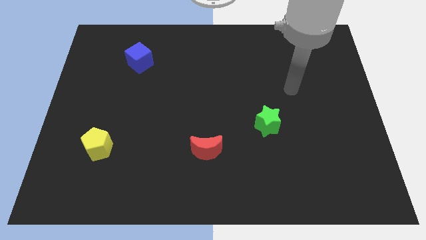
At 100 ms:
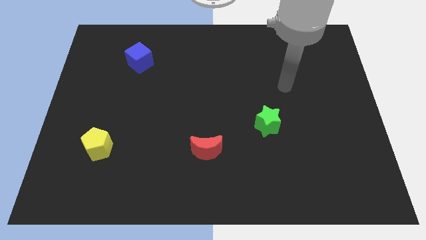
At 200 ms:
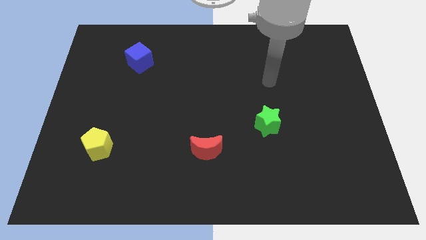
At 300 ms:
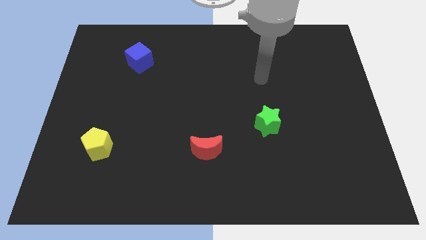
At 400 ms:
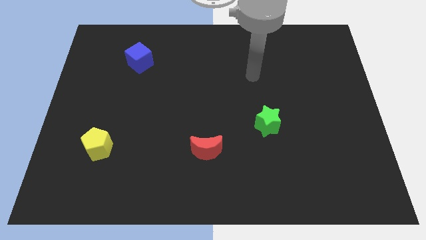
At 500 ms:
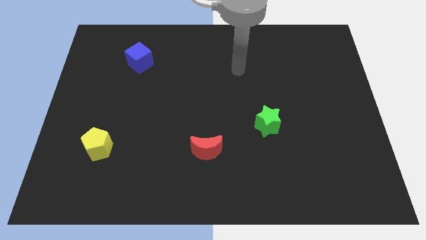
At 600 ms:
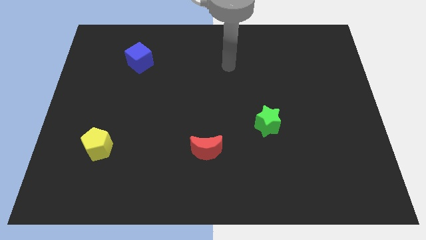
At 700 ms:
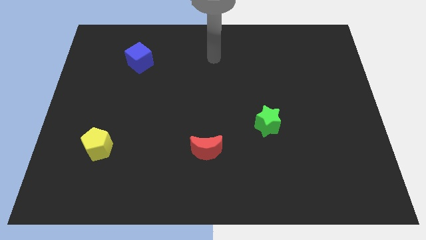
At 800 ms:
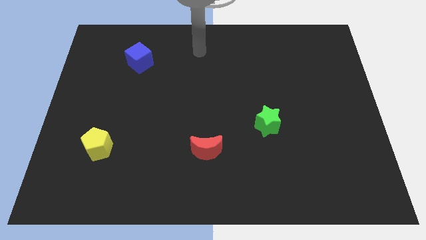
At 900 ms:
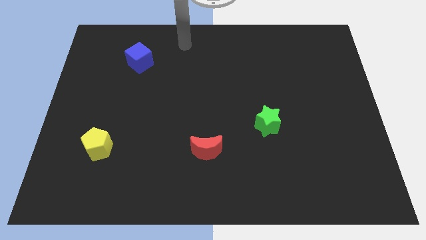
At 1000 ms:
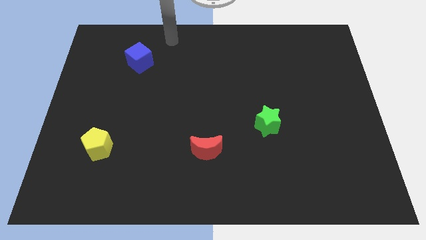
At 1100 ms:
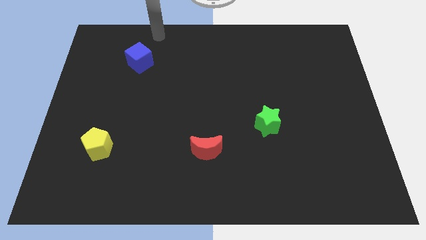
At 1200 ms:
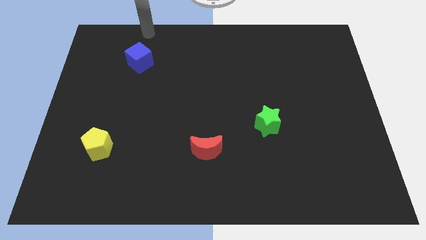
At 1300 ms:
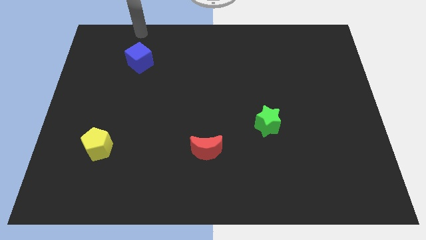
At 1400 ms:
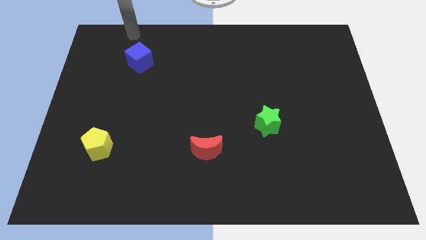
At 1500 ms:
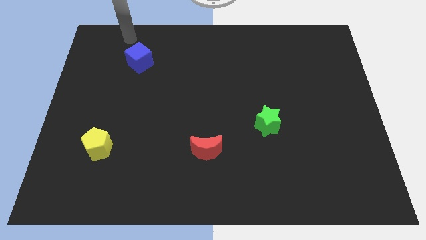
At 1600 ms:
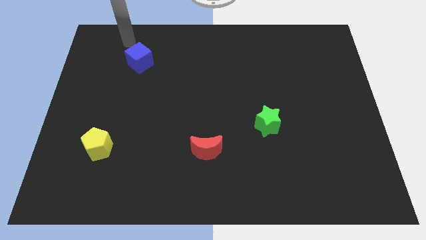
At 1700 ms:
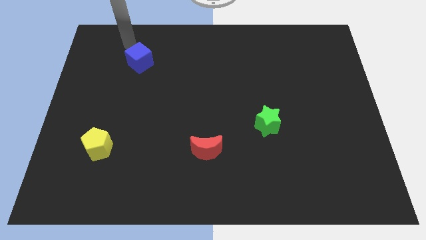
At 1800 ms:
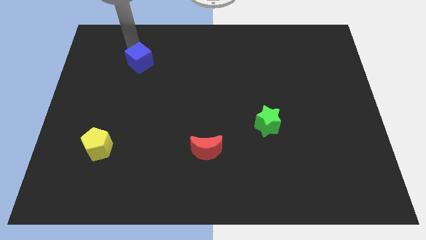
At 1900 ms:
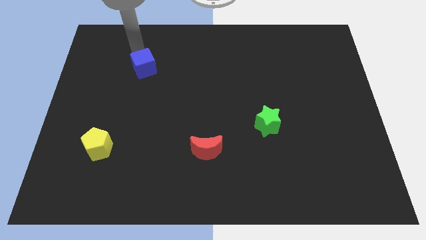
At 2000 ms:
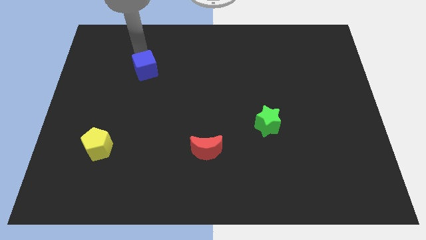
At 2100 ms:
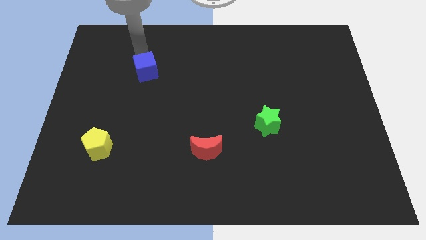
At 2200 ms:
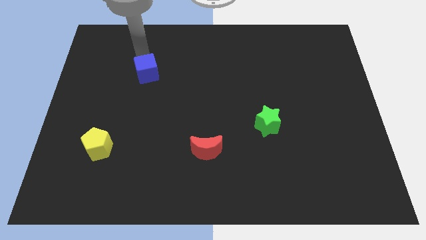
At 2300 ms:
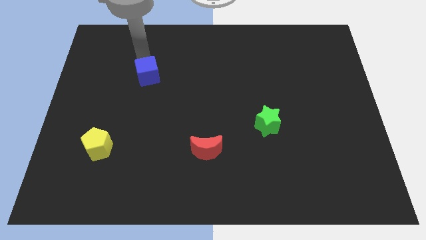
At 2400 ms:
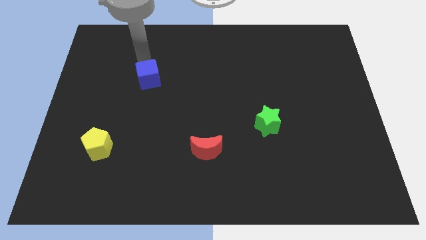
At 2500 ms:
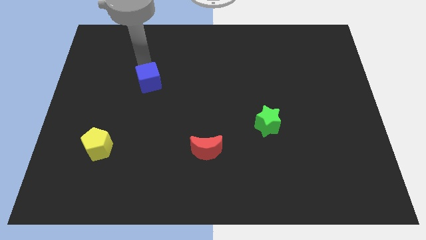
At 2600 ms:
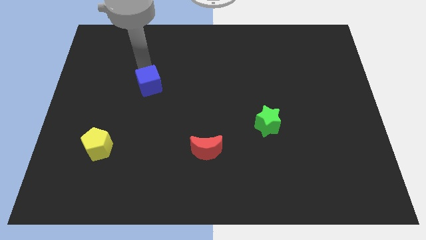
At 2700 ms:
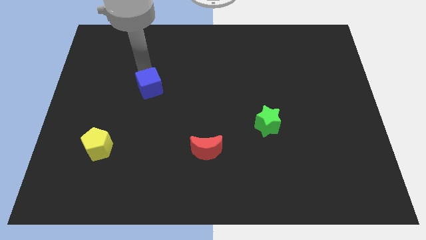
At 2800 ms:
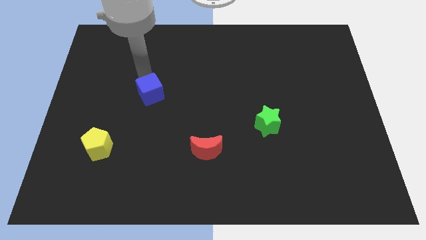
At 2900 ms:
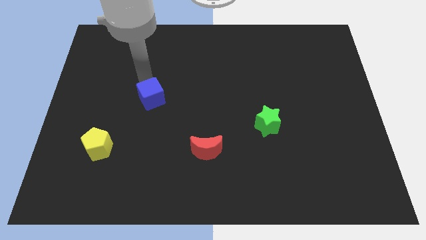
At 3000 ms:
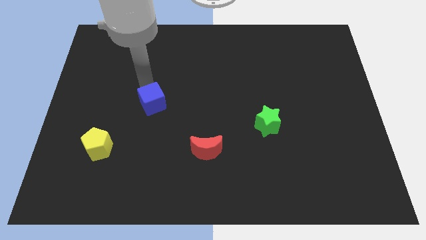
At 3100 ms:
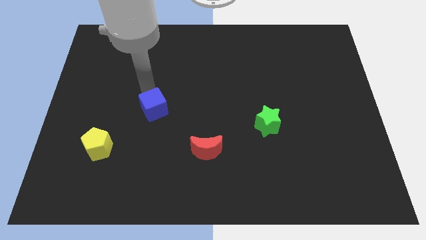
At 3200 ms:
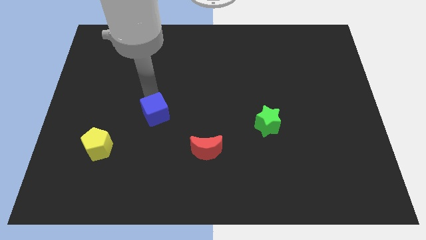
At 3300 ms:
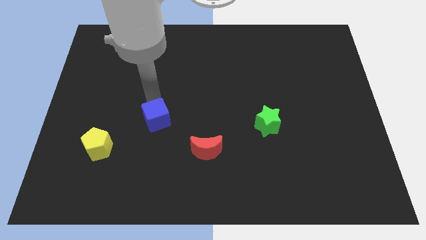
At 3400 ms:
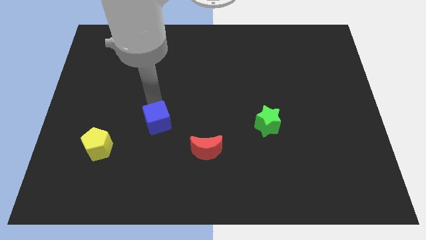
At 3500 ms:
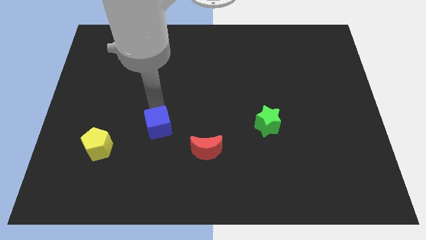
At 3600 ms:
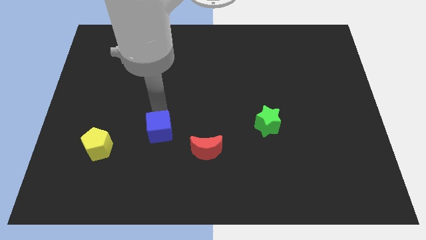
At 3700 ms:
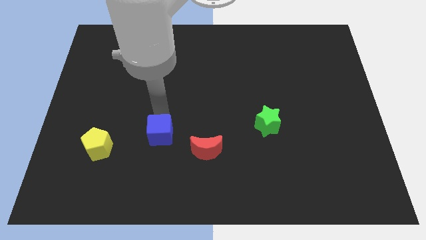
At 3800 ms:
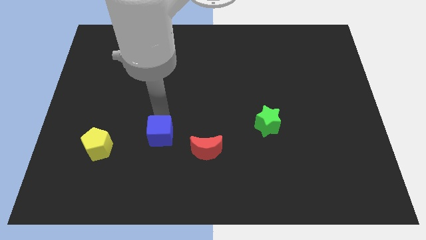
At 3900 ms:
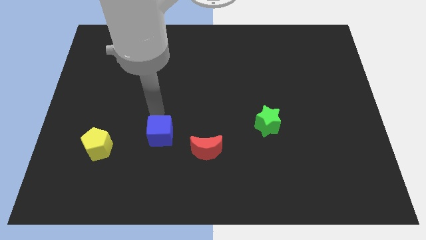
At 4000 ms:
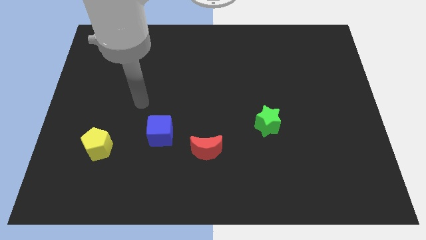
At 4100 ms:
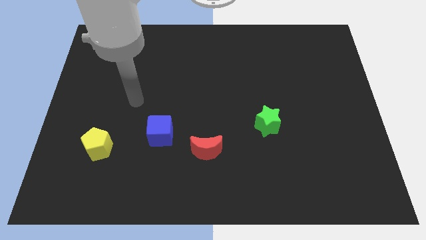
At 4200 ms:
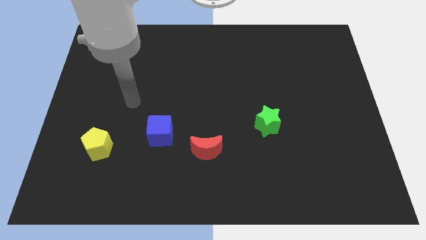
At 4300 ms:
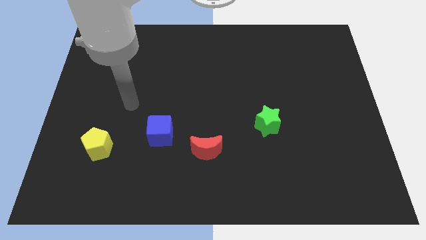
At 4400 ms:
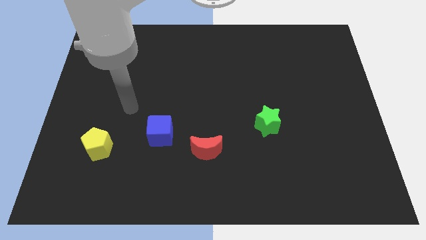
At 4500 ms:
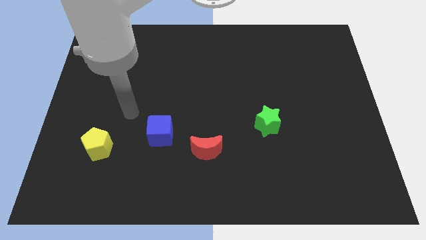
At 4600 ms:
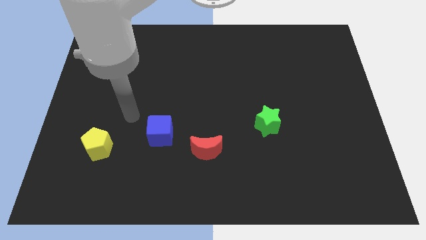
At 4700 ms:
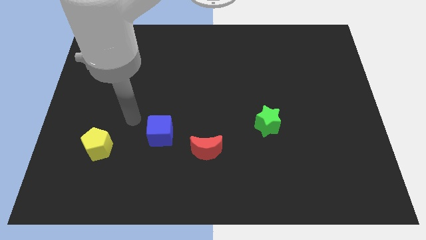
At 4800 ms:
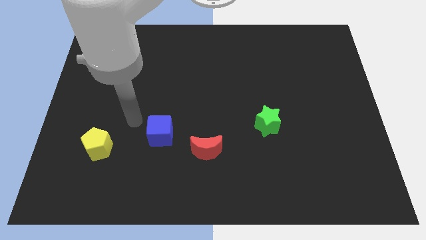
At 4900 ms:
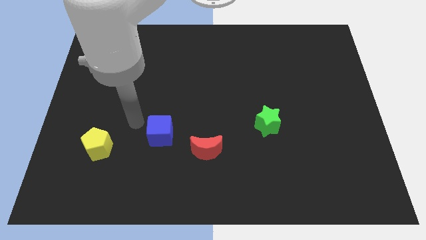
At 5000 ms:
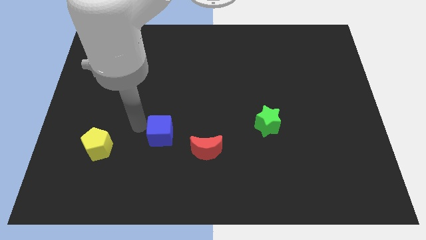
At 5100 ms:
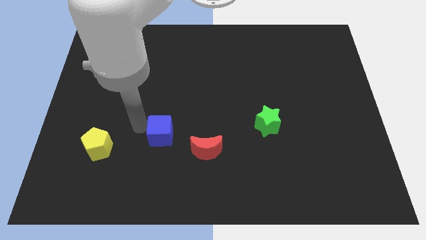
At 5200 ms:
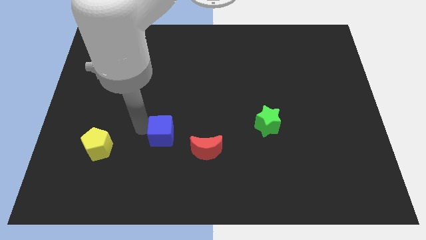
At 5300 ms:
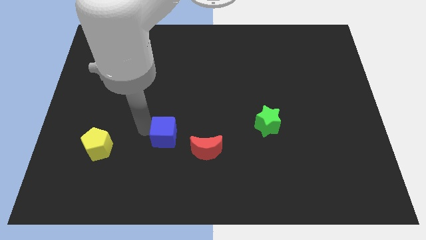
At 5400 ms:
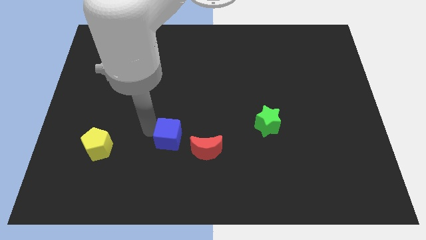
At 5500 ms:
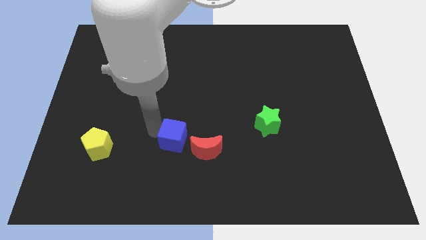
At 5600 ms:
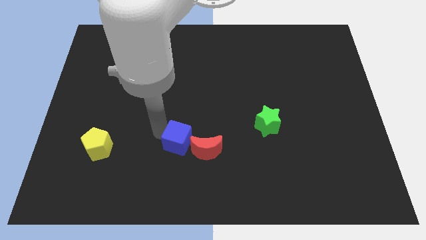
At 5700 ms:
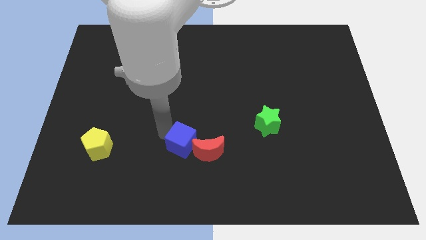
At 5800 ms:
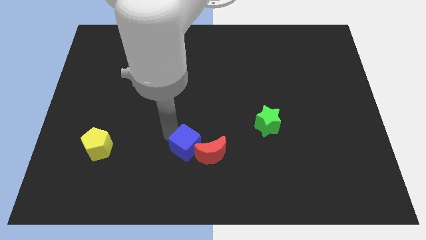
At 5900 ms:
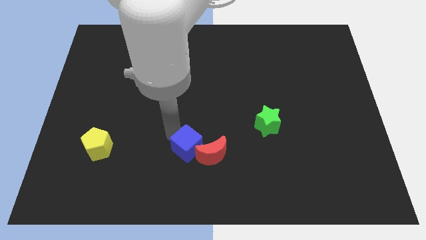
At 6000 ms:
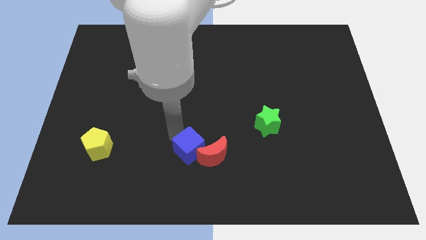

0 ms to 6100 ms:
put the blue block towards the moon

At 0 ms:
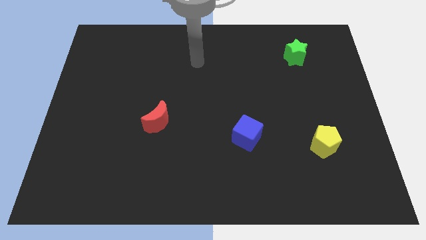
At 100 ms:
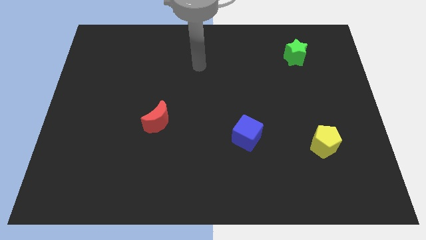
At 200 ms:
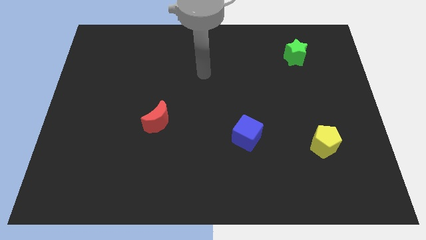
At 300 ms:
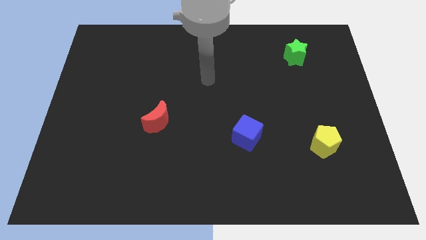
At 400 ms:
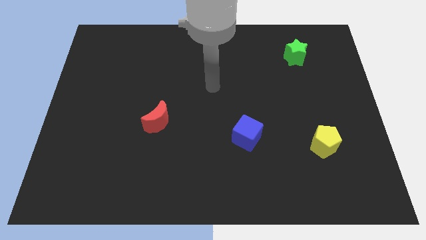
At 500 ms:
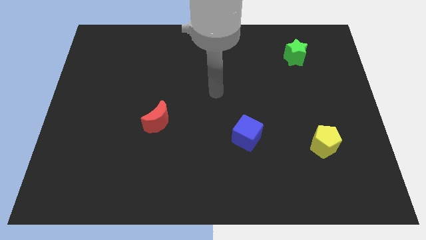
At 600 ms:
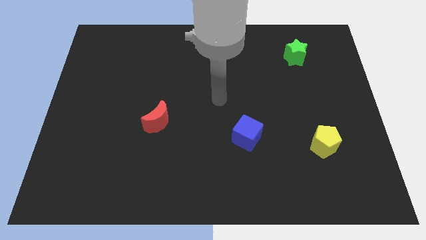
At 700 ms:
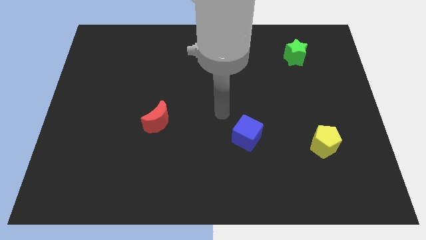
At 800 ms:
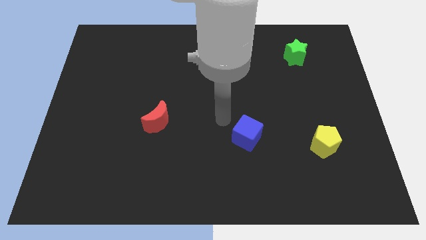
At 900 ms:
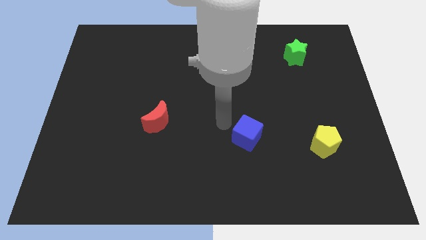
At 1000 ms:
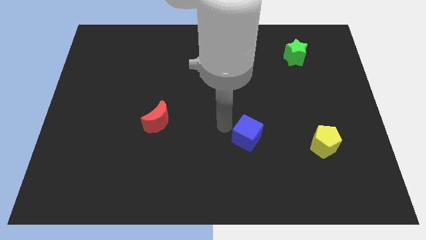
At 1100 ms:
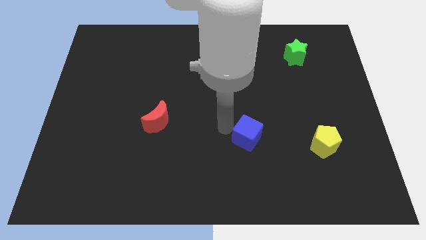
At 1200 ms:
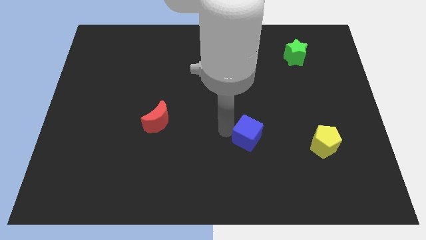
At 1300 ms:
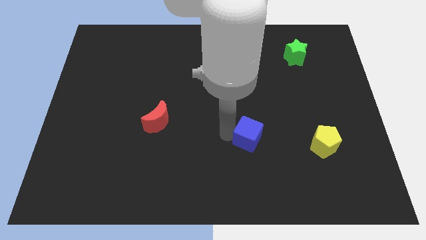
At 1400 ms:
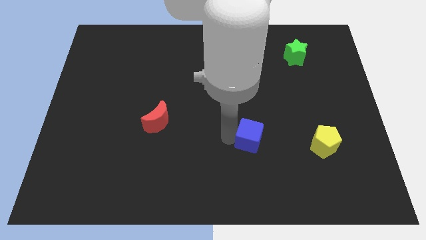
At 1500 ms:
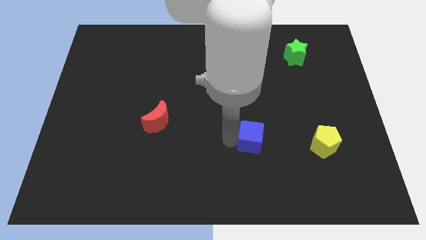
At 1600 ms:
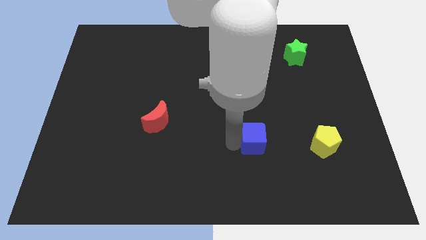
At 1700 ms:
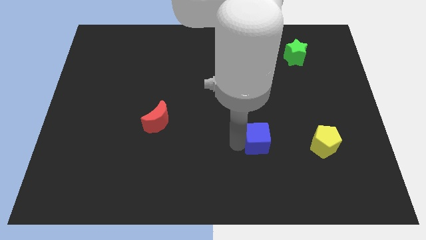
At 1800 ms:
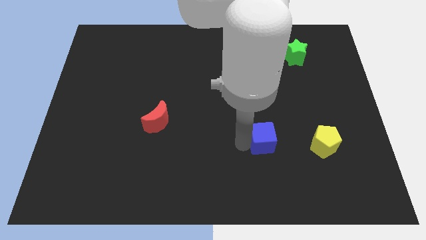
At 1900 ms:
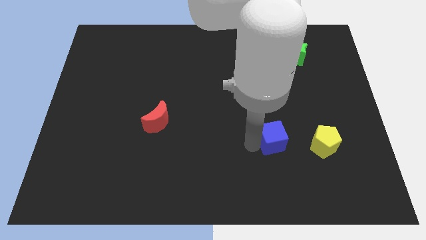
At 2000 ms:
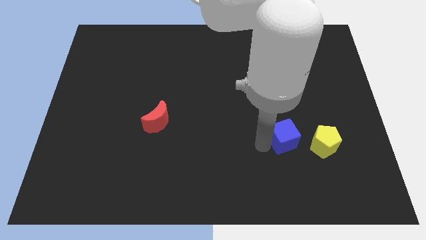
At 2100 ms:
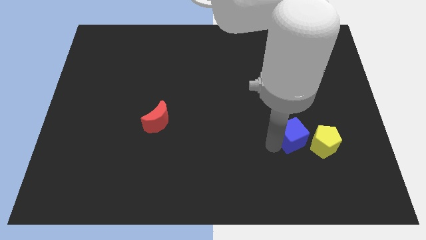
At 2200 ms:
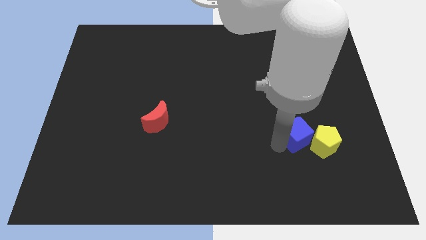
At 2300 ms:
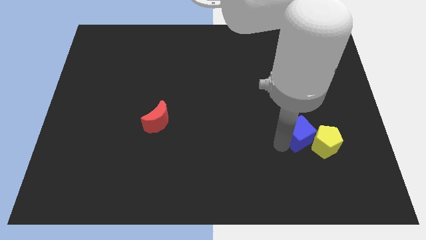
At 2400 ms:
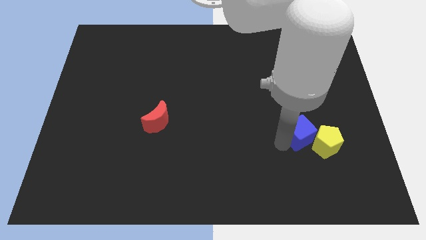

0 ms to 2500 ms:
push the cube towards the yellow block

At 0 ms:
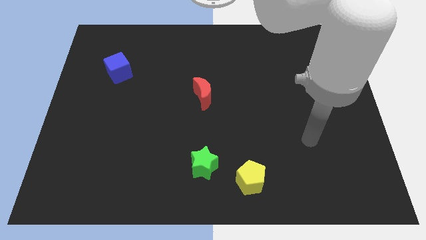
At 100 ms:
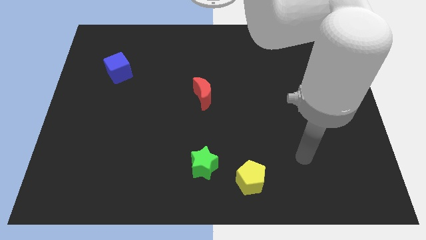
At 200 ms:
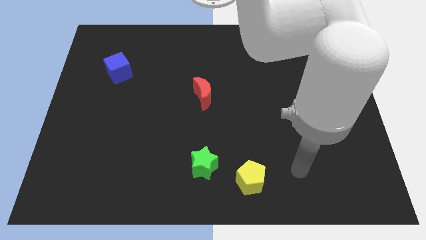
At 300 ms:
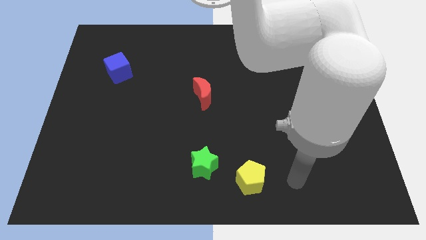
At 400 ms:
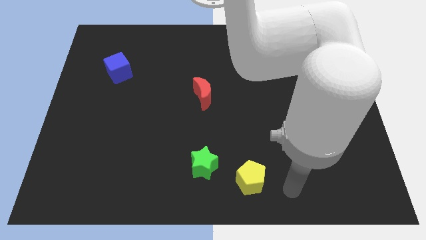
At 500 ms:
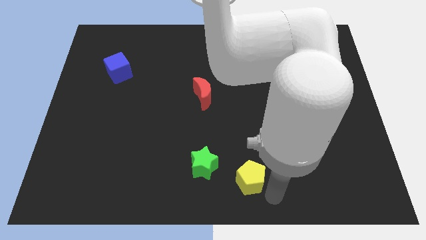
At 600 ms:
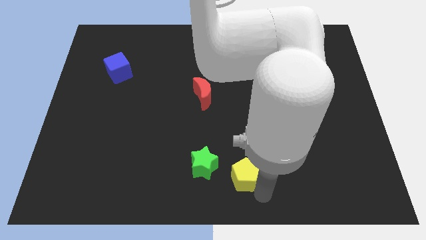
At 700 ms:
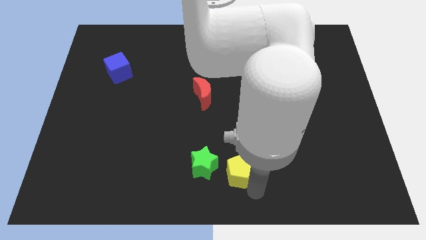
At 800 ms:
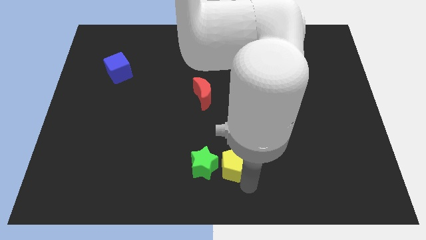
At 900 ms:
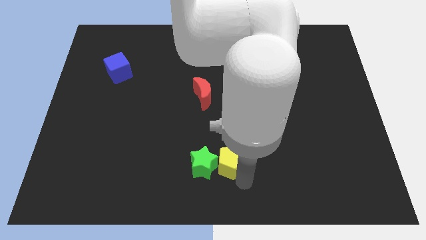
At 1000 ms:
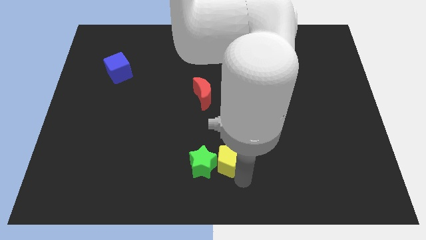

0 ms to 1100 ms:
push the pentagon next to the green block
